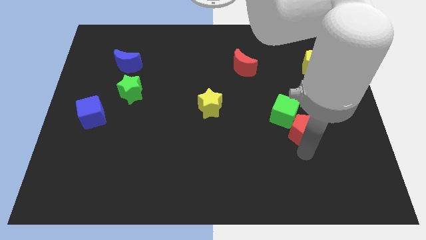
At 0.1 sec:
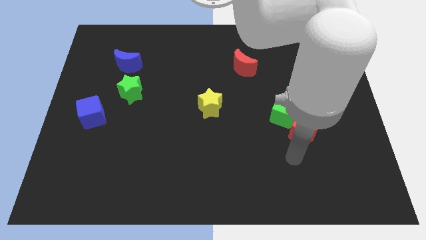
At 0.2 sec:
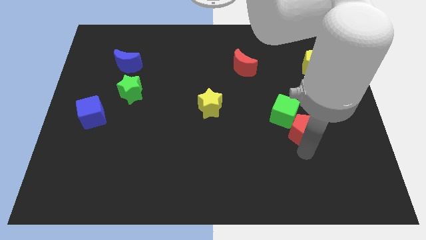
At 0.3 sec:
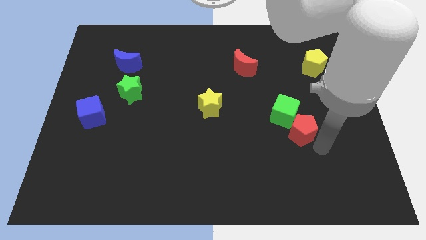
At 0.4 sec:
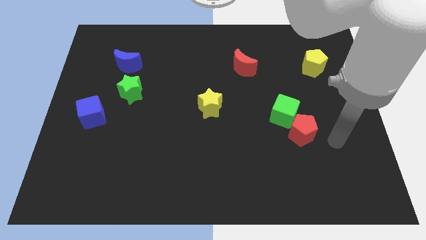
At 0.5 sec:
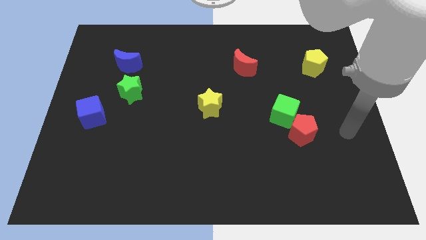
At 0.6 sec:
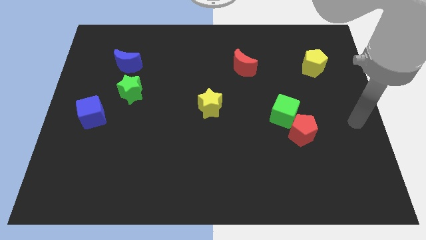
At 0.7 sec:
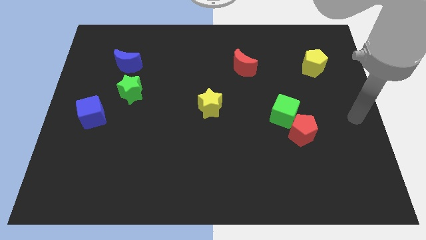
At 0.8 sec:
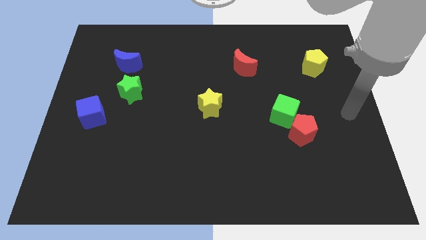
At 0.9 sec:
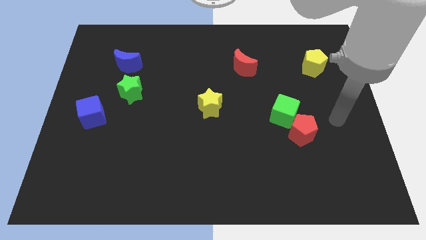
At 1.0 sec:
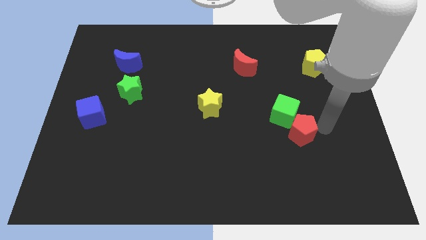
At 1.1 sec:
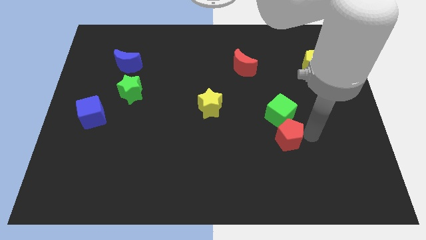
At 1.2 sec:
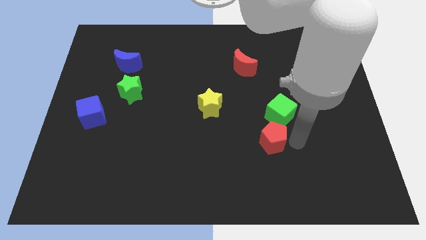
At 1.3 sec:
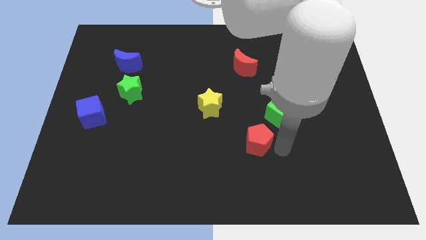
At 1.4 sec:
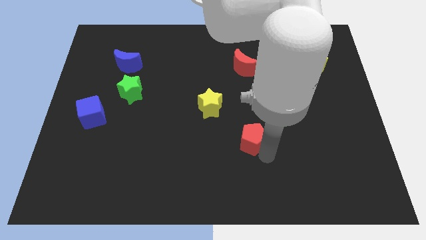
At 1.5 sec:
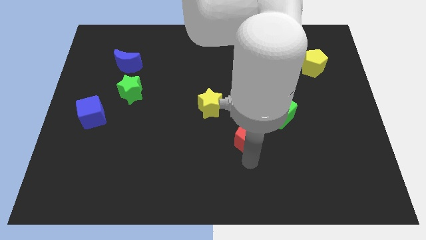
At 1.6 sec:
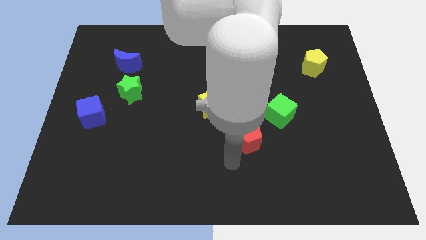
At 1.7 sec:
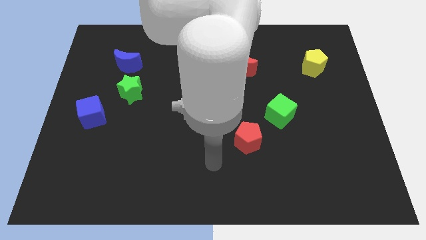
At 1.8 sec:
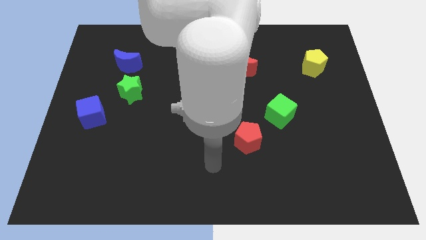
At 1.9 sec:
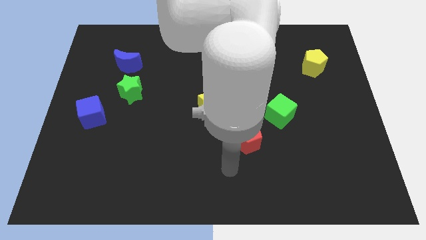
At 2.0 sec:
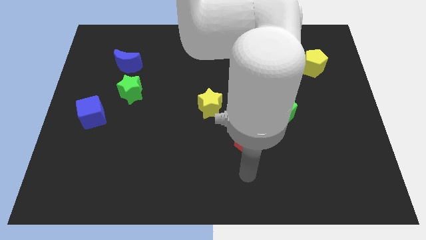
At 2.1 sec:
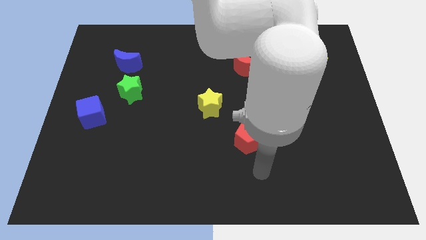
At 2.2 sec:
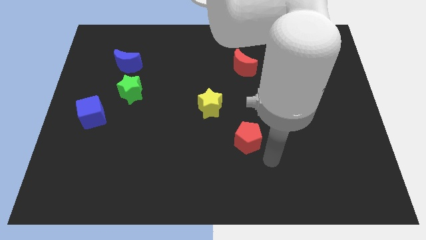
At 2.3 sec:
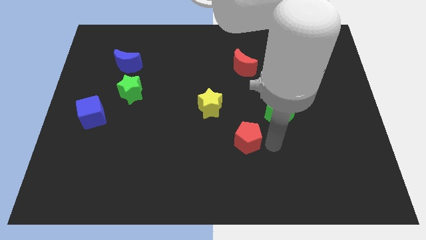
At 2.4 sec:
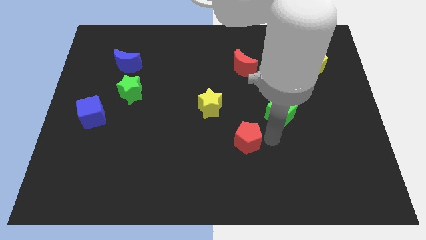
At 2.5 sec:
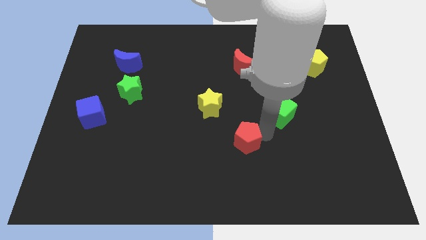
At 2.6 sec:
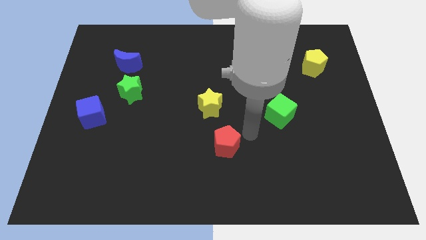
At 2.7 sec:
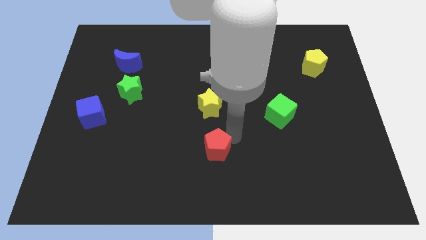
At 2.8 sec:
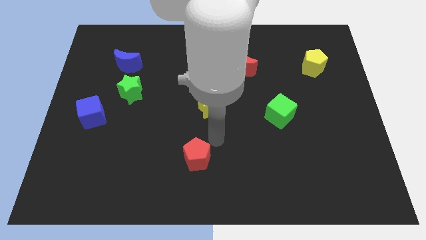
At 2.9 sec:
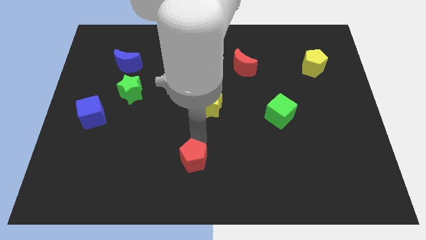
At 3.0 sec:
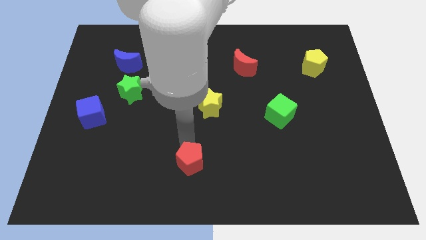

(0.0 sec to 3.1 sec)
place the red pentagon diagonal to the green cube

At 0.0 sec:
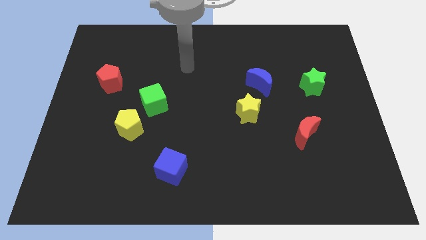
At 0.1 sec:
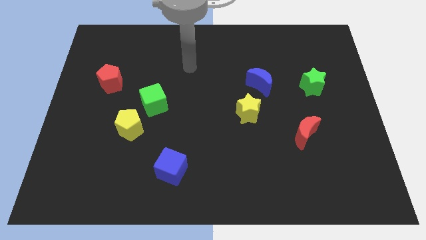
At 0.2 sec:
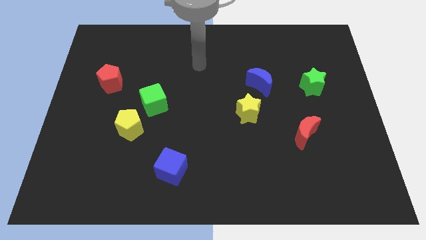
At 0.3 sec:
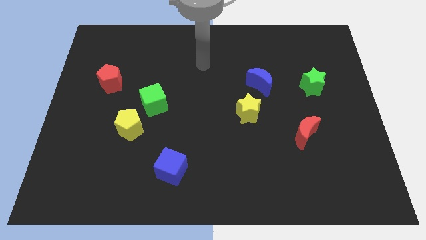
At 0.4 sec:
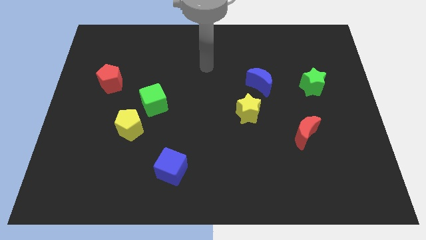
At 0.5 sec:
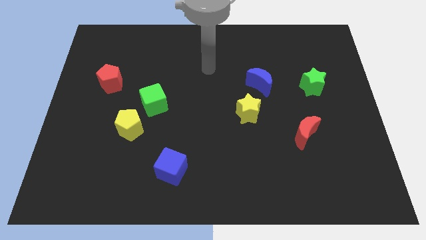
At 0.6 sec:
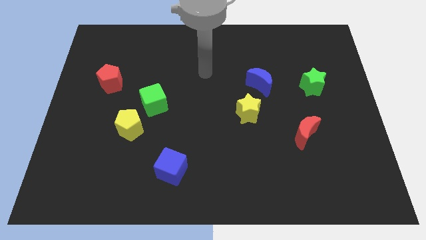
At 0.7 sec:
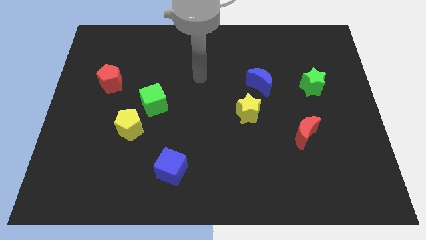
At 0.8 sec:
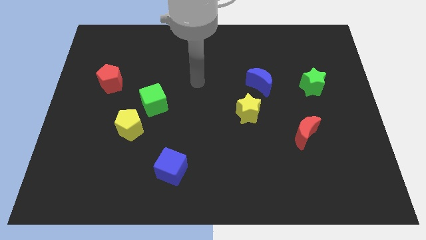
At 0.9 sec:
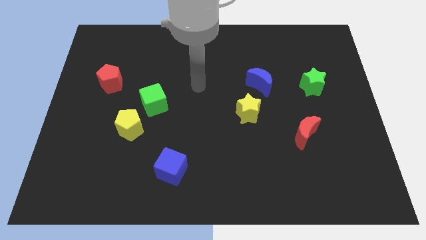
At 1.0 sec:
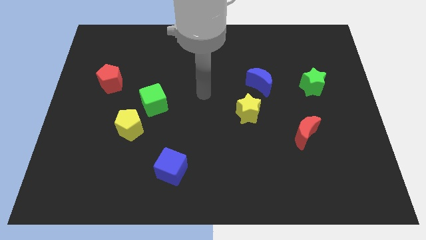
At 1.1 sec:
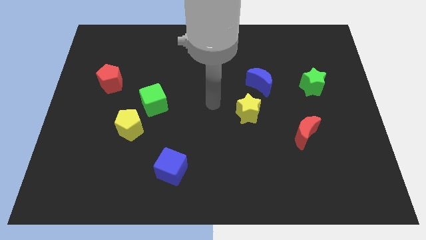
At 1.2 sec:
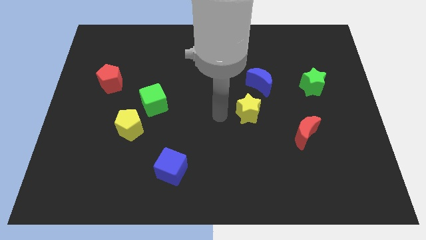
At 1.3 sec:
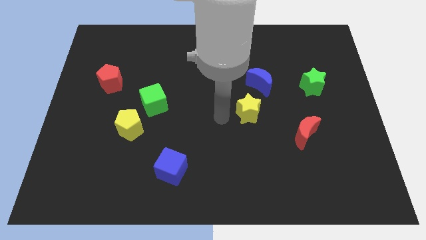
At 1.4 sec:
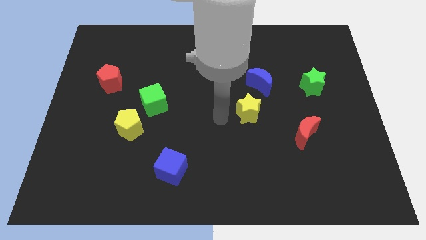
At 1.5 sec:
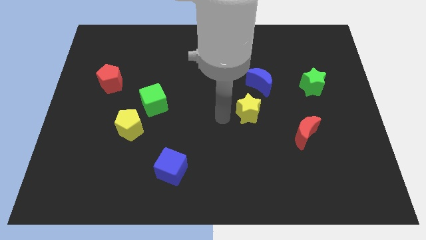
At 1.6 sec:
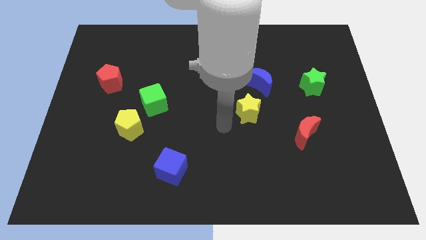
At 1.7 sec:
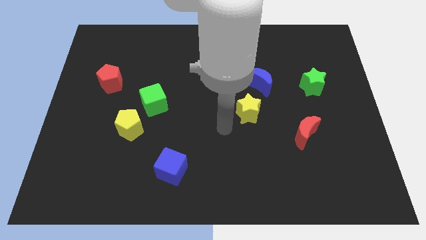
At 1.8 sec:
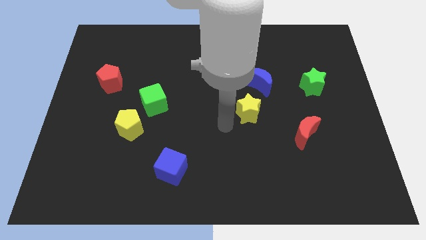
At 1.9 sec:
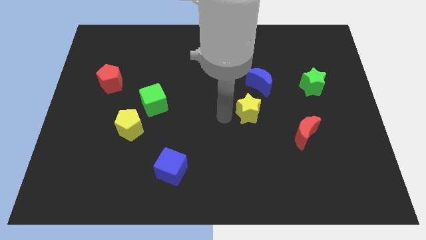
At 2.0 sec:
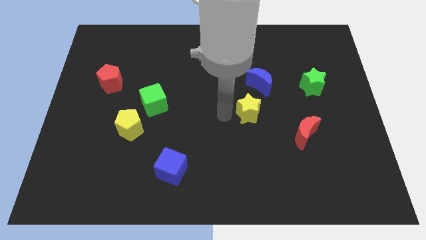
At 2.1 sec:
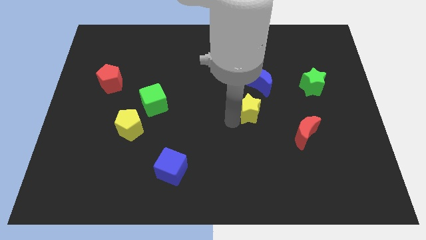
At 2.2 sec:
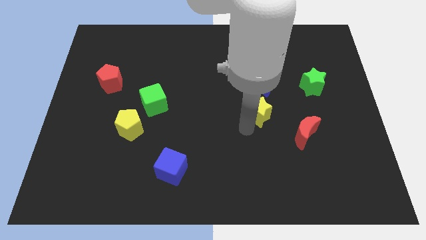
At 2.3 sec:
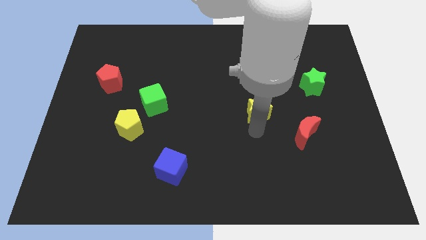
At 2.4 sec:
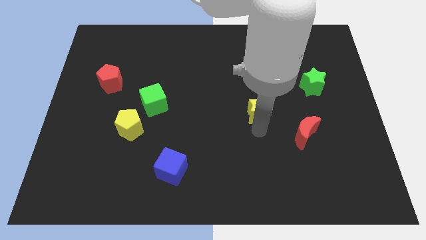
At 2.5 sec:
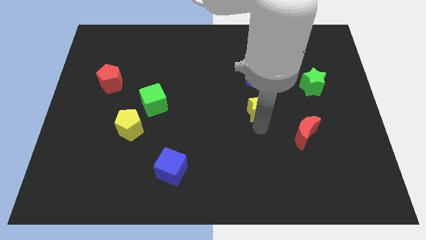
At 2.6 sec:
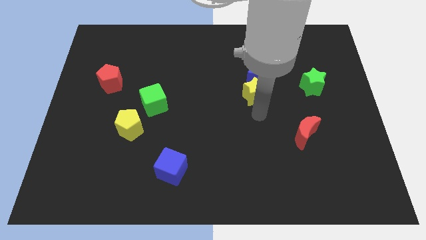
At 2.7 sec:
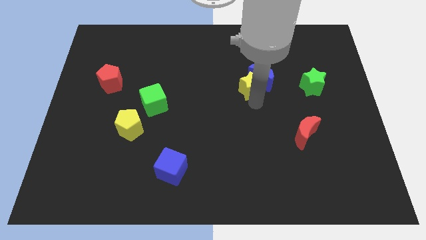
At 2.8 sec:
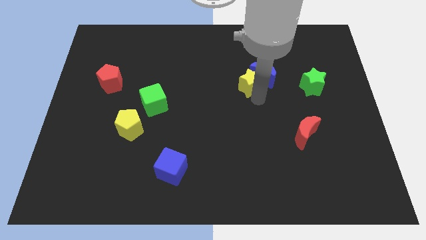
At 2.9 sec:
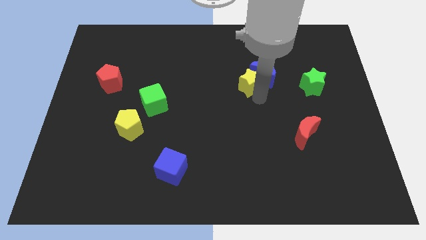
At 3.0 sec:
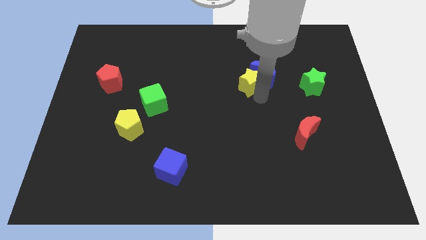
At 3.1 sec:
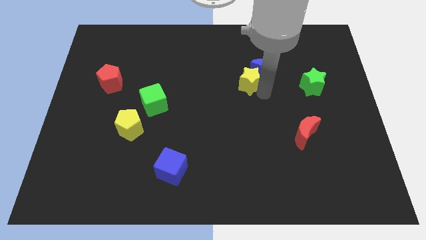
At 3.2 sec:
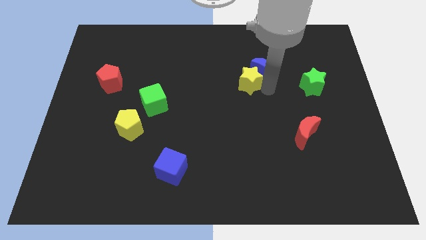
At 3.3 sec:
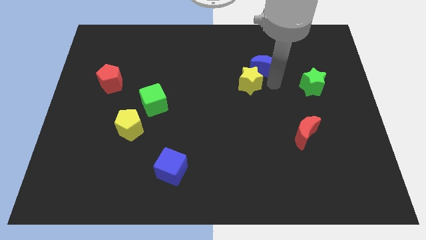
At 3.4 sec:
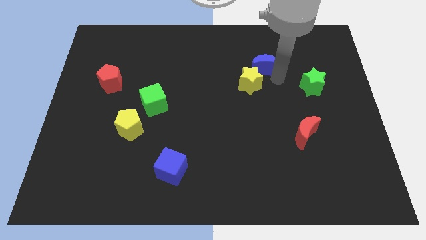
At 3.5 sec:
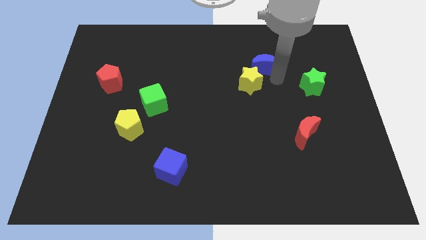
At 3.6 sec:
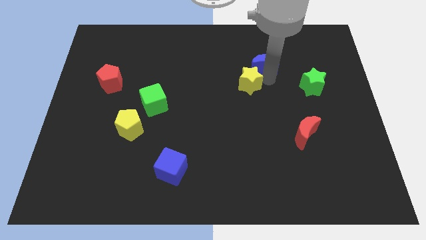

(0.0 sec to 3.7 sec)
push the yellow star into the blue moon

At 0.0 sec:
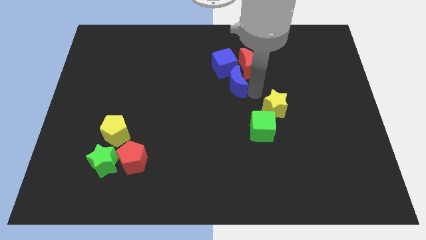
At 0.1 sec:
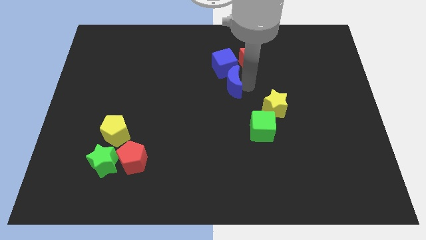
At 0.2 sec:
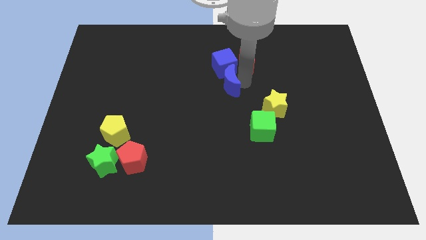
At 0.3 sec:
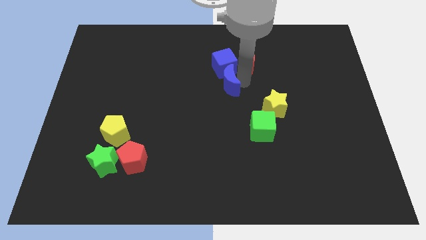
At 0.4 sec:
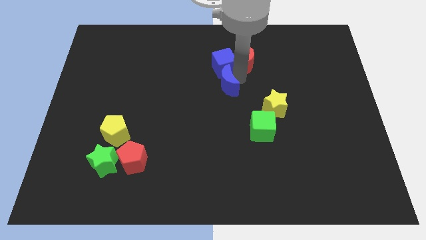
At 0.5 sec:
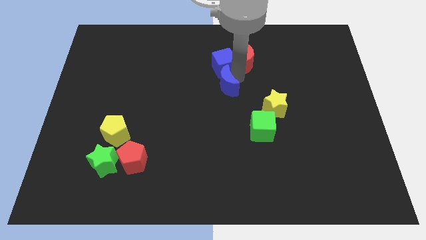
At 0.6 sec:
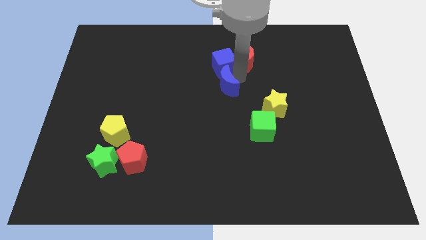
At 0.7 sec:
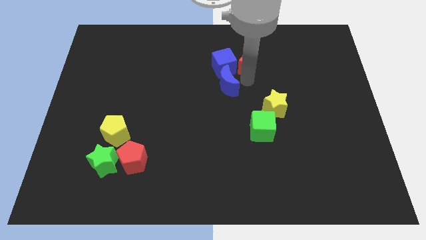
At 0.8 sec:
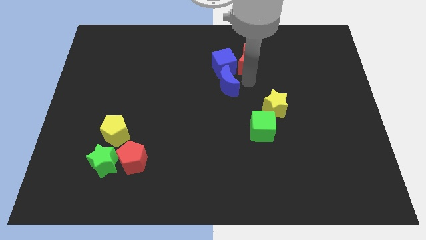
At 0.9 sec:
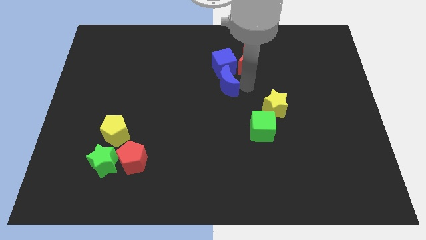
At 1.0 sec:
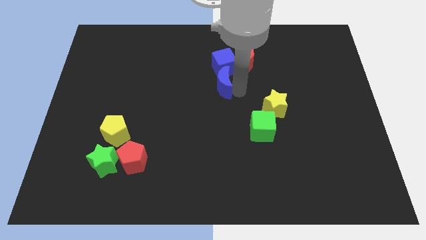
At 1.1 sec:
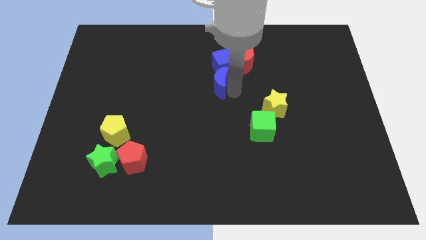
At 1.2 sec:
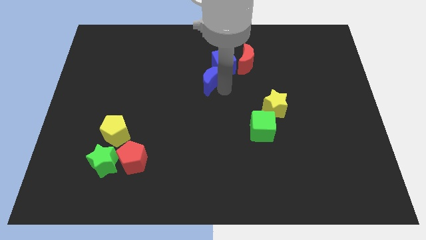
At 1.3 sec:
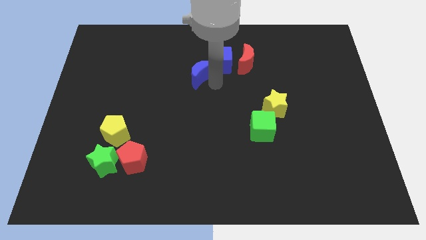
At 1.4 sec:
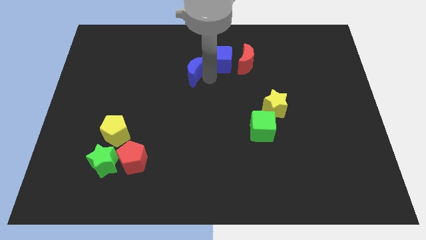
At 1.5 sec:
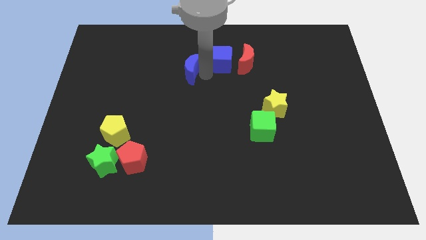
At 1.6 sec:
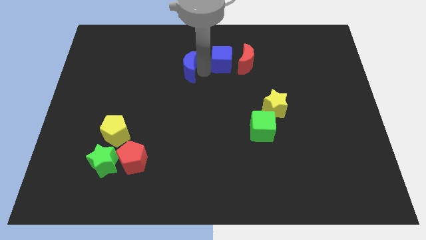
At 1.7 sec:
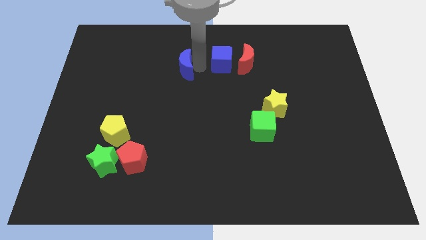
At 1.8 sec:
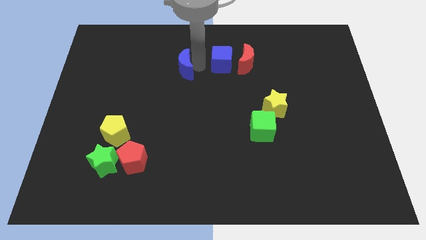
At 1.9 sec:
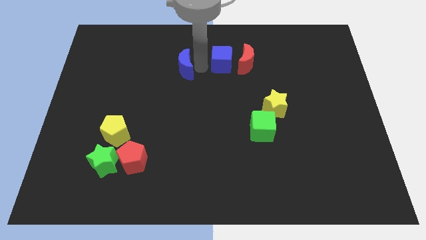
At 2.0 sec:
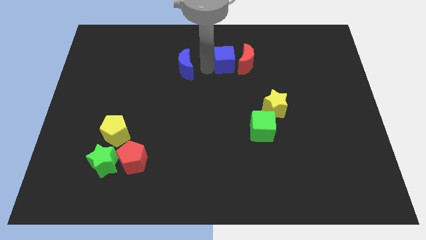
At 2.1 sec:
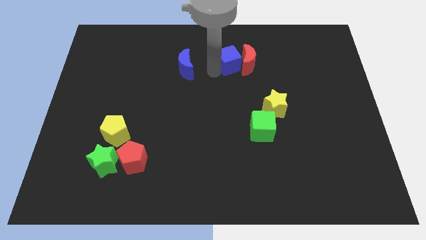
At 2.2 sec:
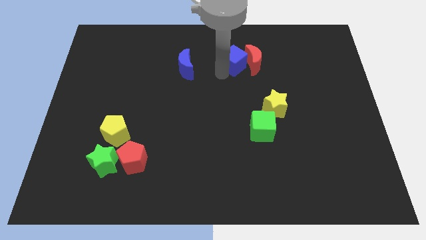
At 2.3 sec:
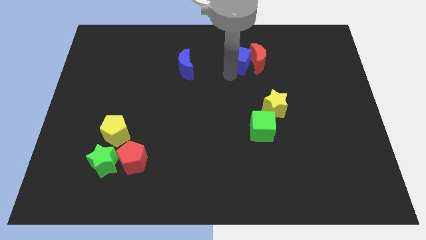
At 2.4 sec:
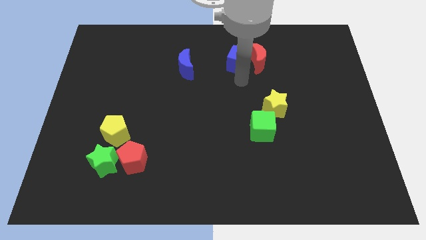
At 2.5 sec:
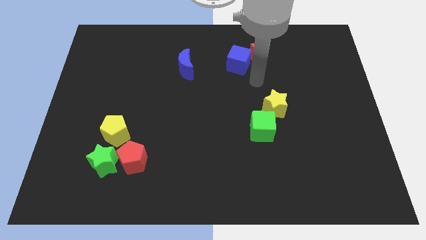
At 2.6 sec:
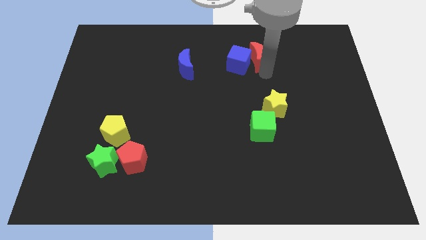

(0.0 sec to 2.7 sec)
separate the blue blocks from each other
